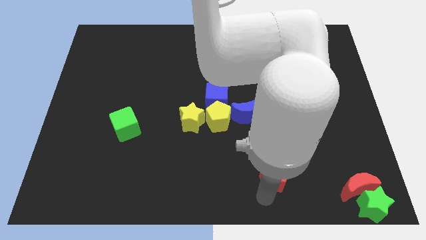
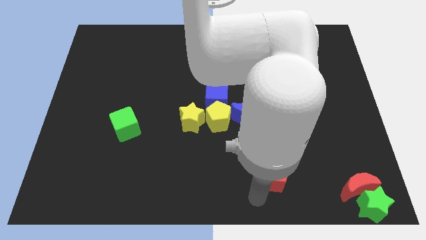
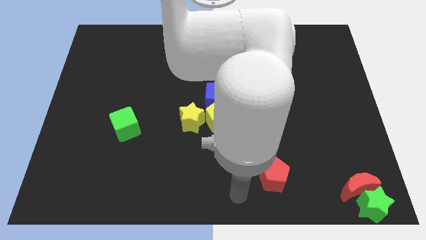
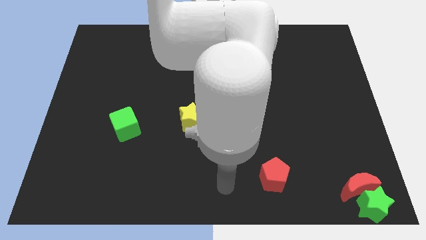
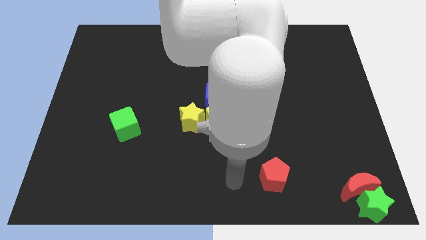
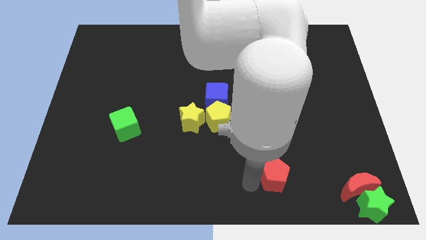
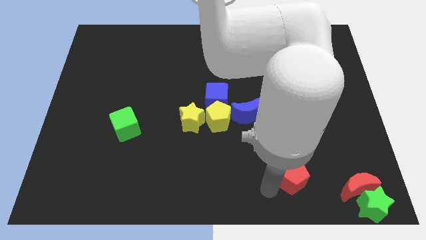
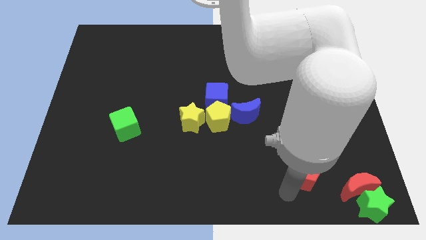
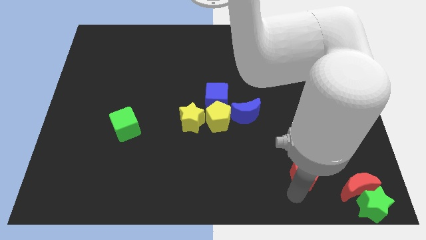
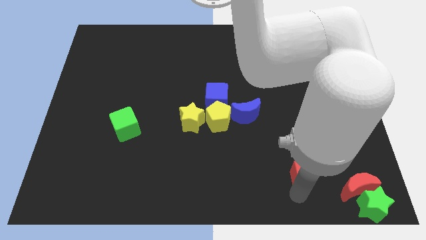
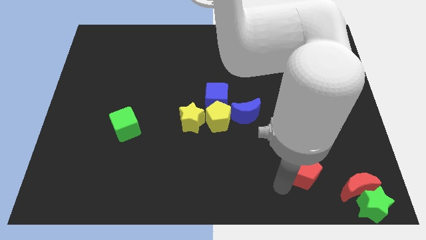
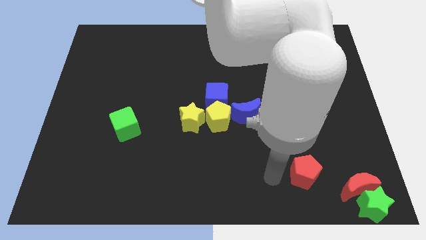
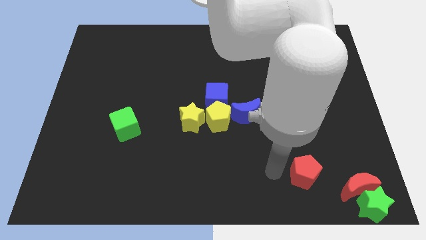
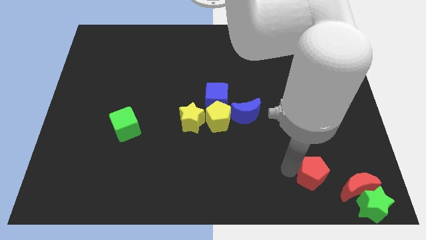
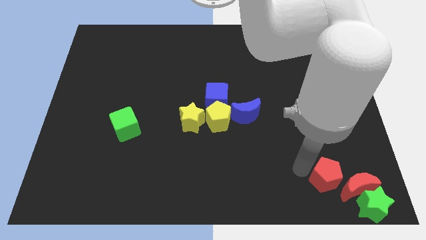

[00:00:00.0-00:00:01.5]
move the red pentagon close to the red moon

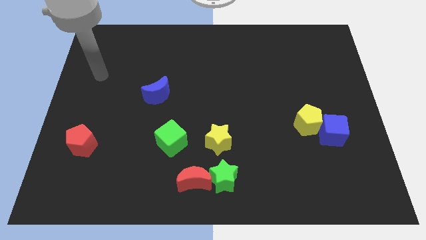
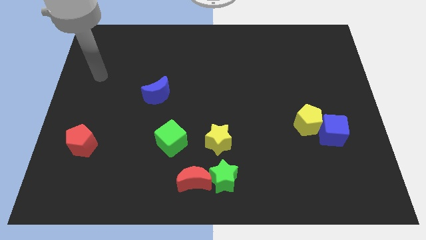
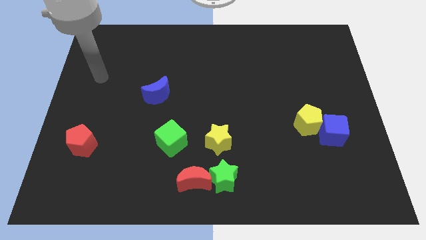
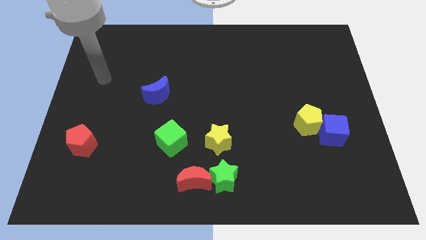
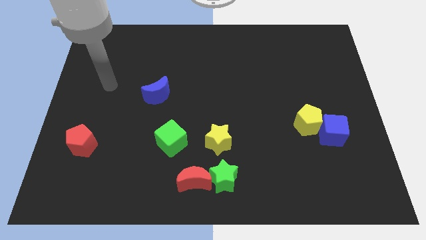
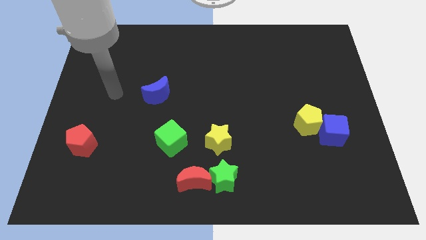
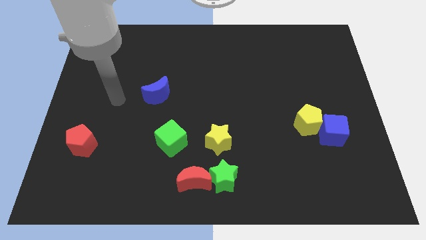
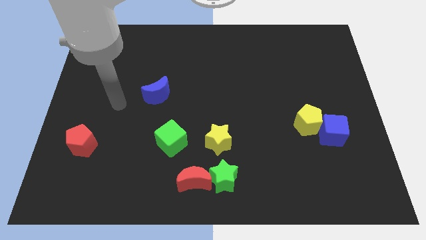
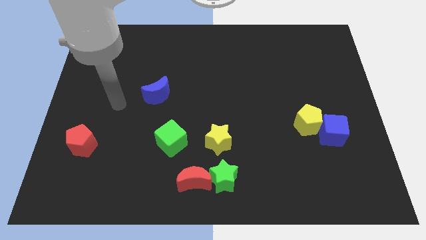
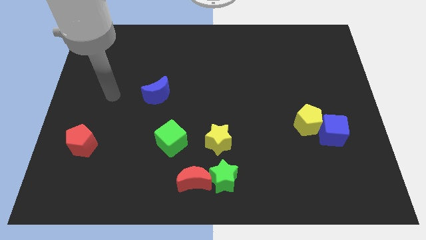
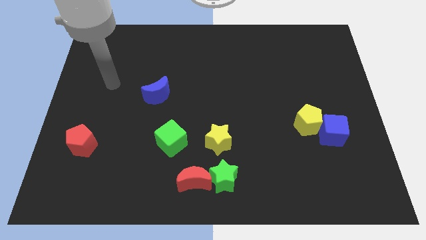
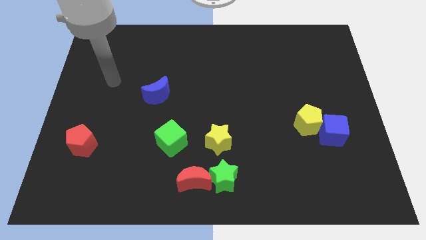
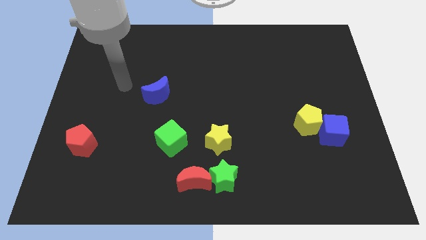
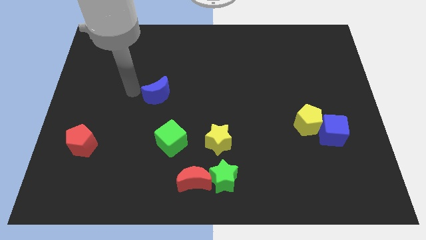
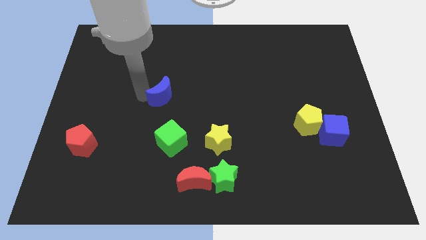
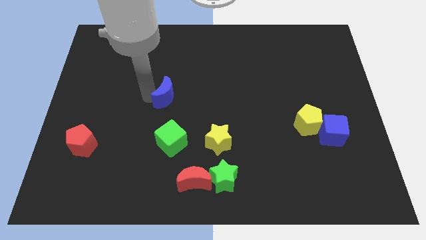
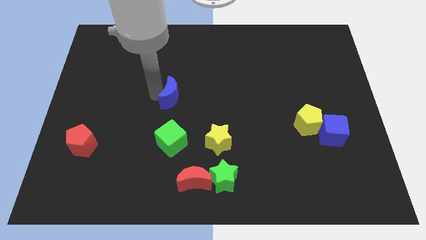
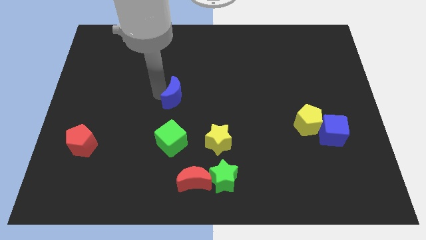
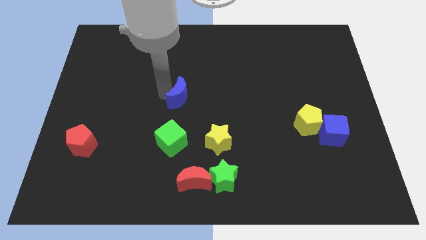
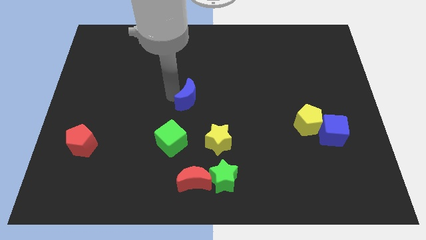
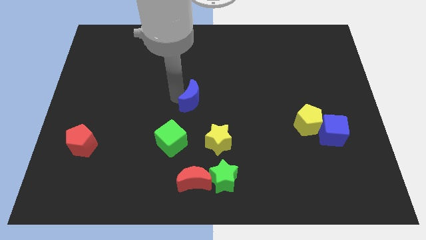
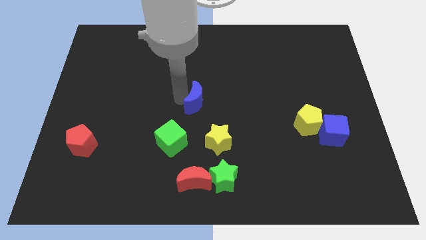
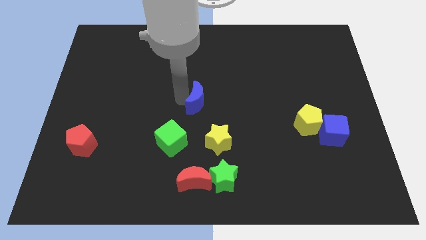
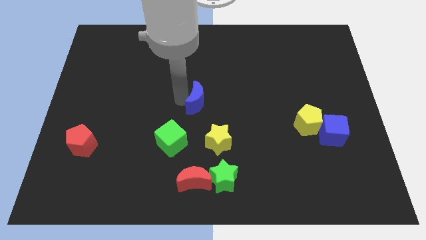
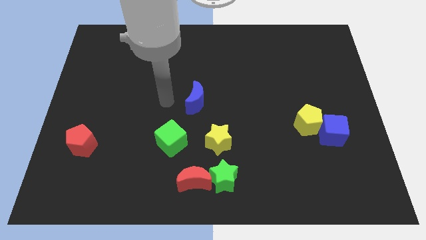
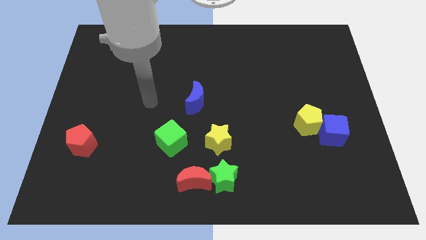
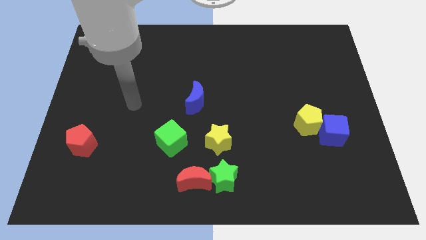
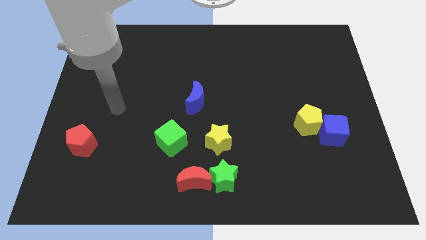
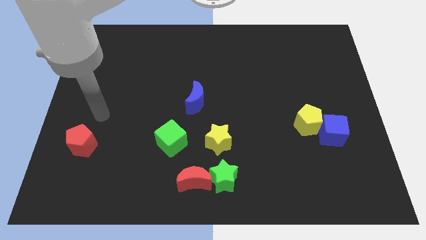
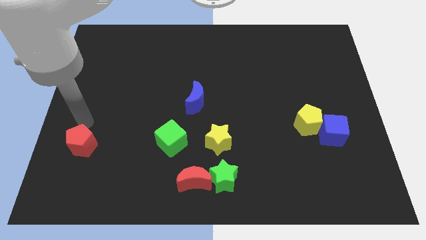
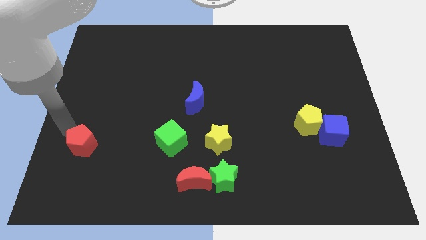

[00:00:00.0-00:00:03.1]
slide blue moon towards the center

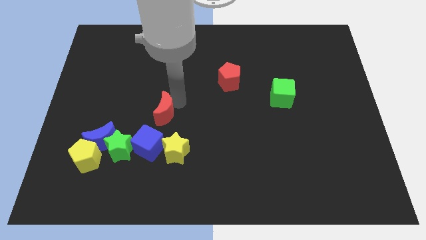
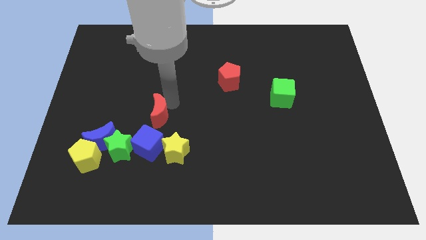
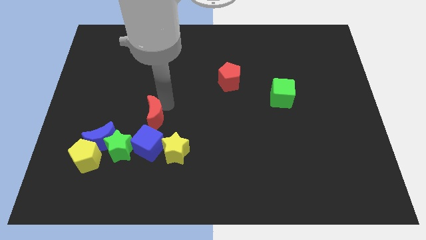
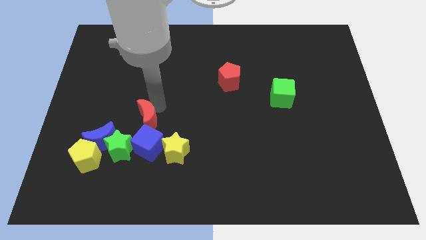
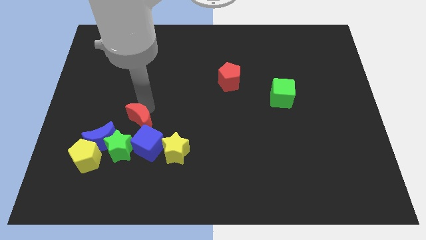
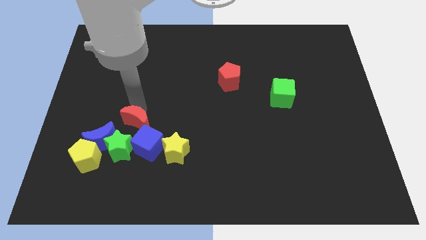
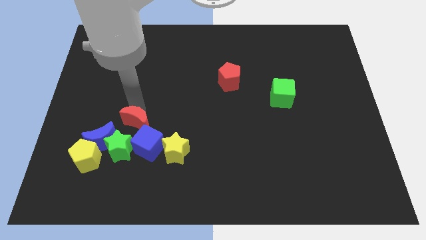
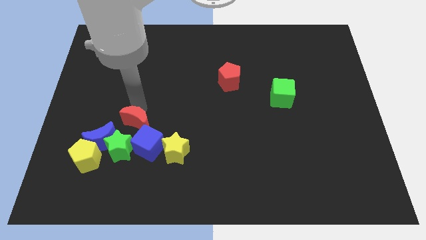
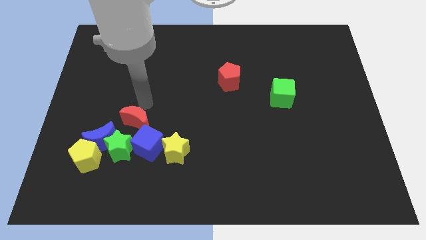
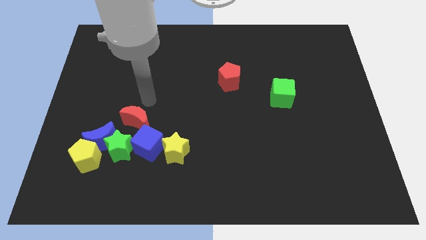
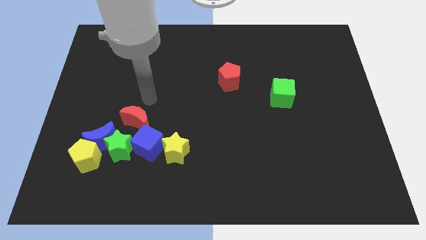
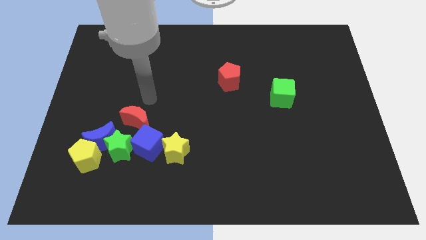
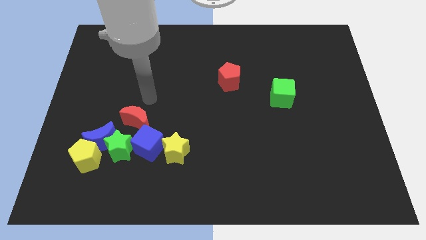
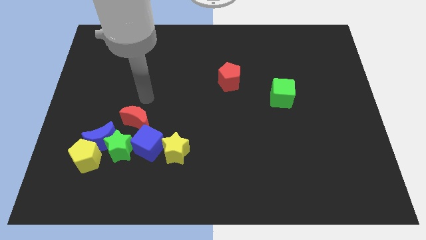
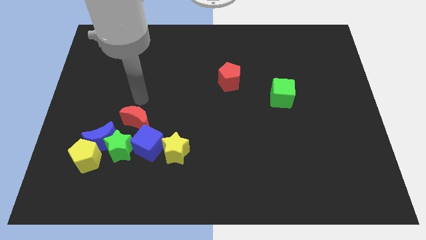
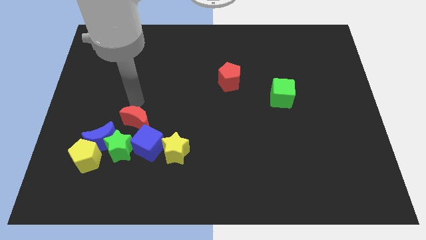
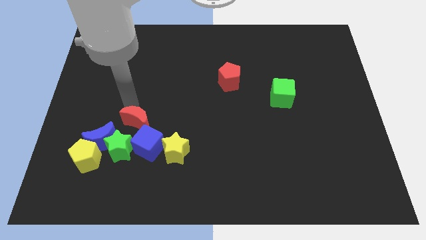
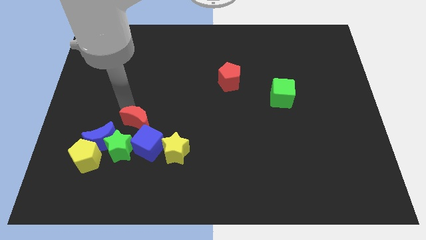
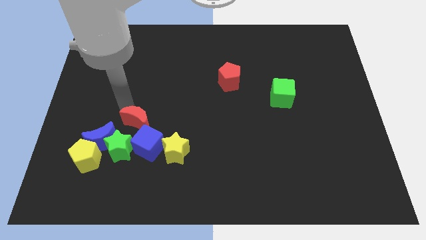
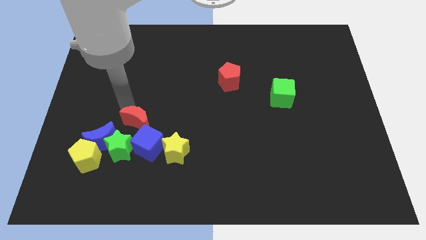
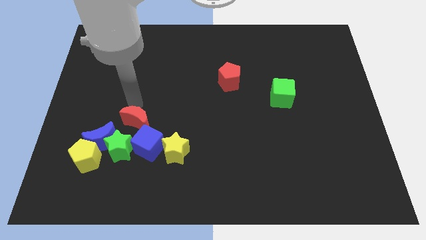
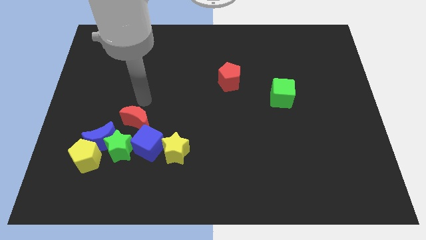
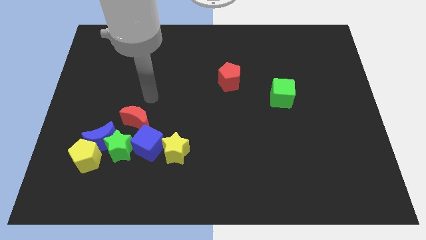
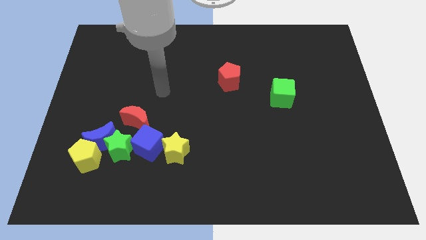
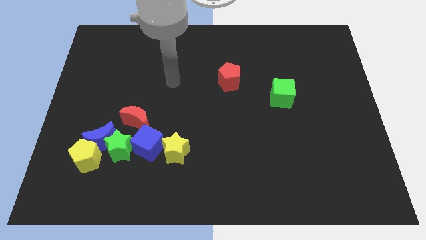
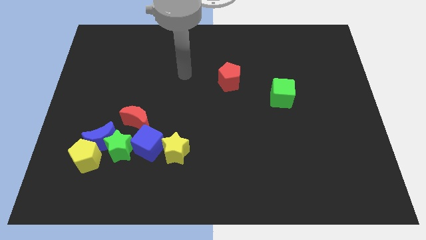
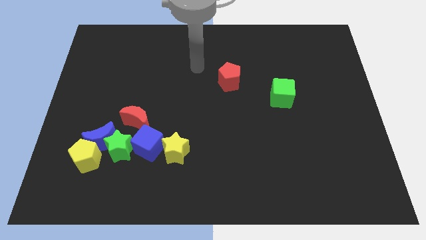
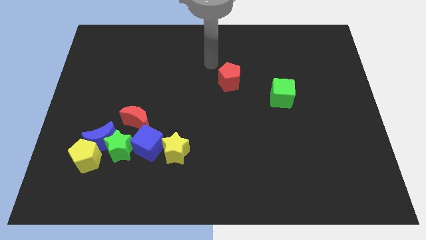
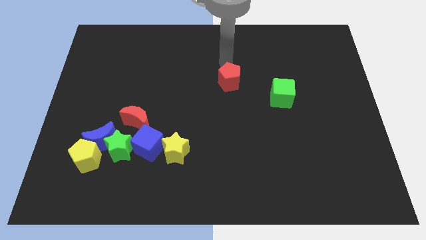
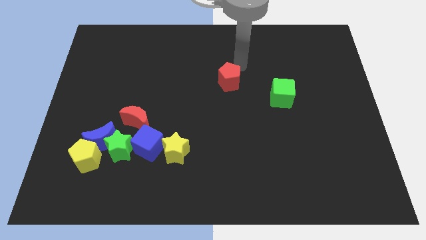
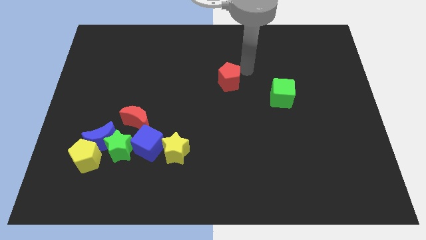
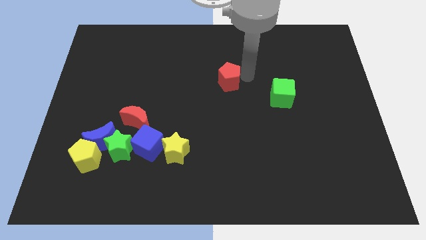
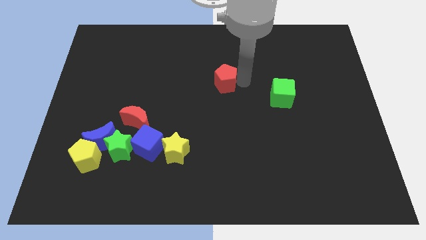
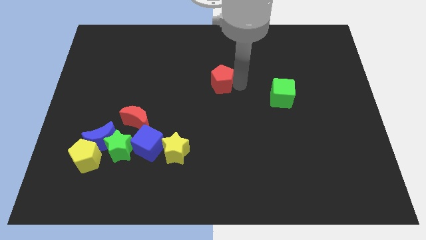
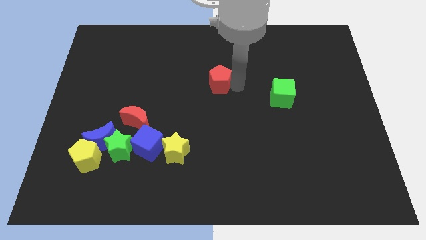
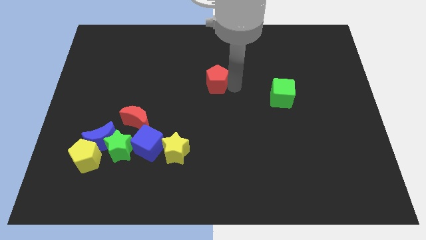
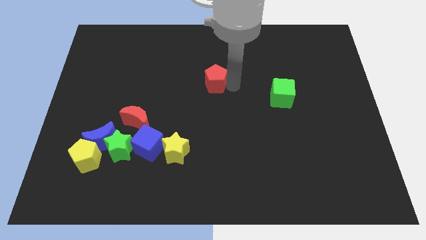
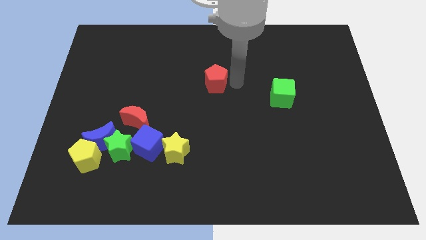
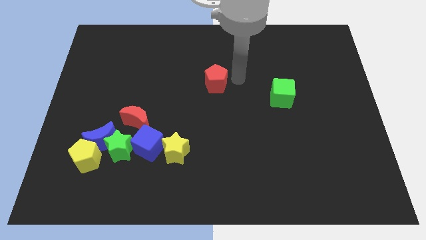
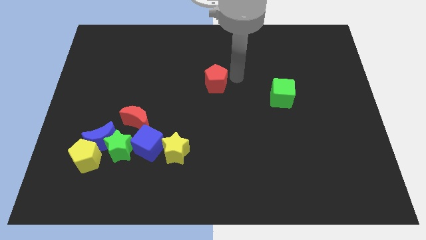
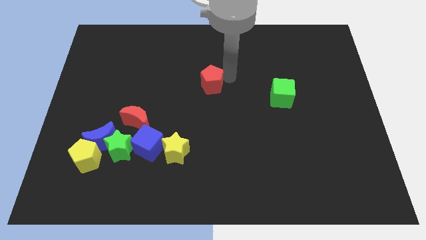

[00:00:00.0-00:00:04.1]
place the red crescent towards the top right side of the green star

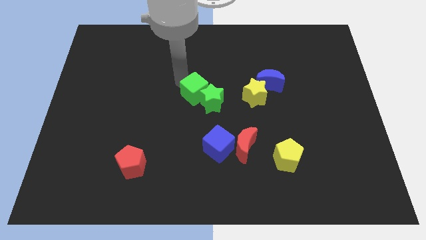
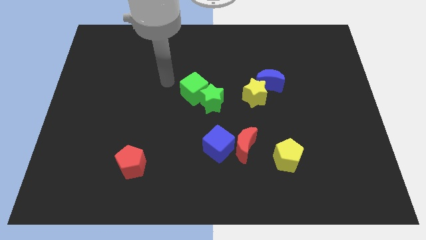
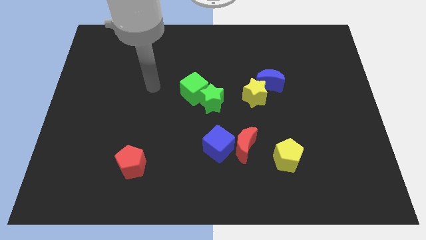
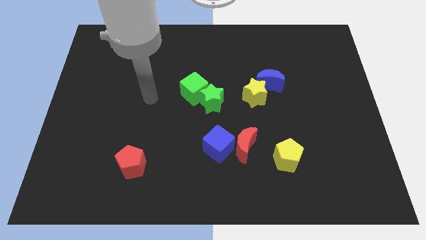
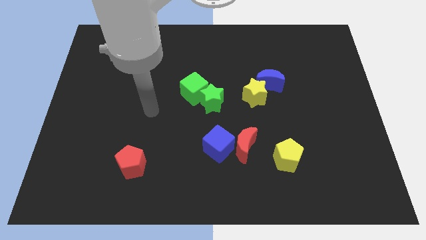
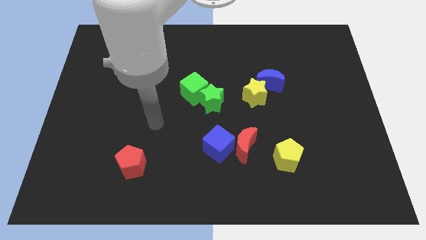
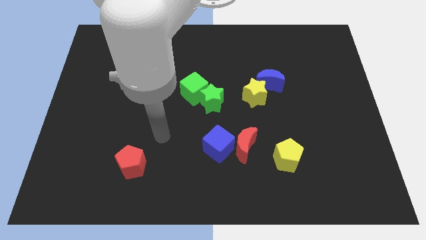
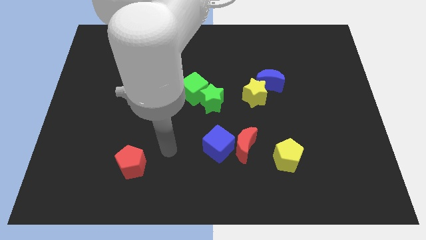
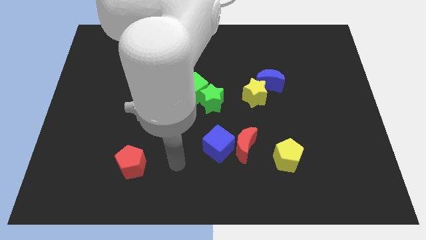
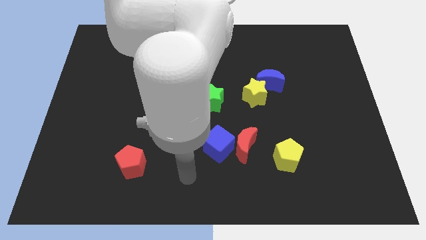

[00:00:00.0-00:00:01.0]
move arm away from the green cube
